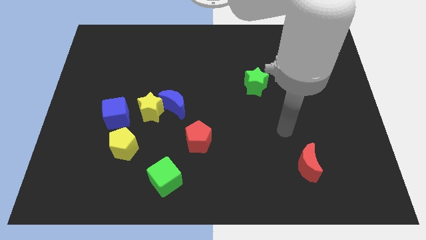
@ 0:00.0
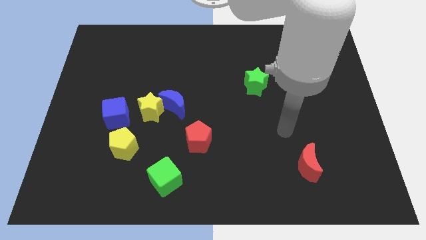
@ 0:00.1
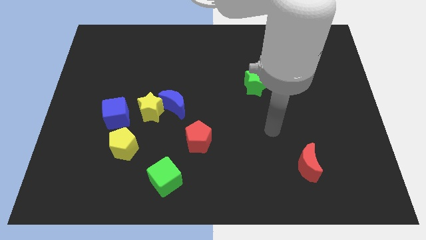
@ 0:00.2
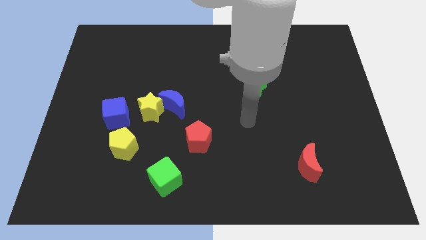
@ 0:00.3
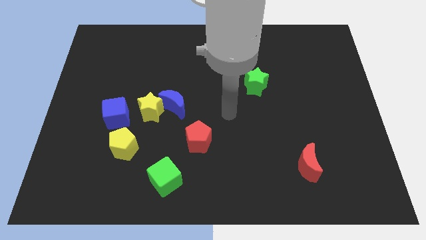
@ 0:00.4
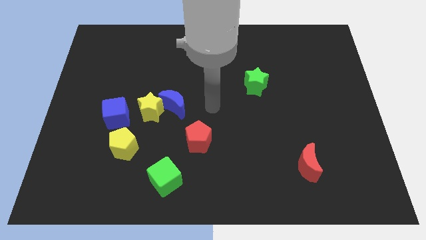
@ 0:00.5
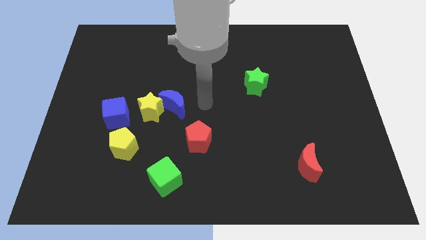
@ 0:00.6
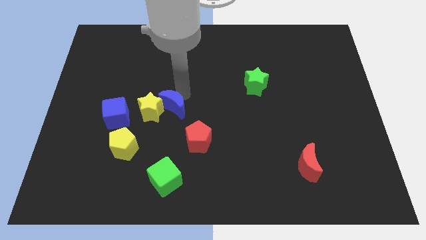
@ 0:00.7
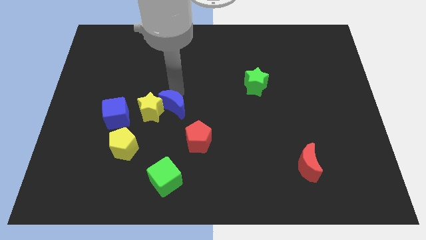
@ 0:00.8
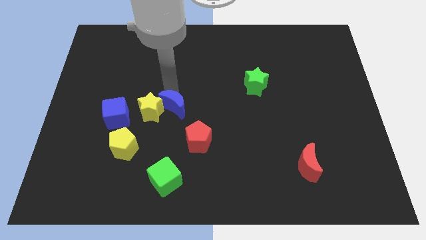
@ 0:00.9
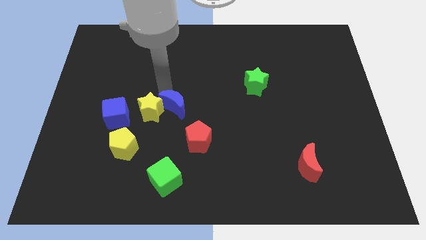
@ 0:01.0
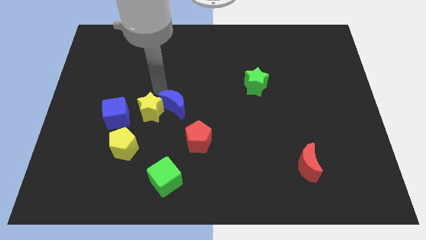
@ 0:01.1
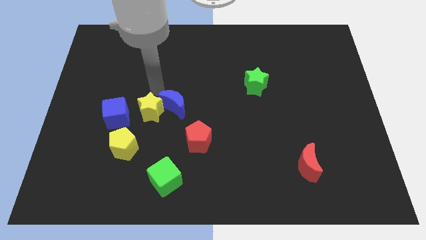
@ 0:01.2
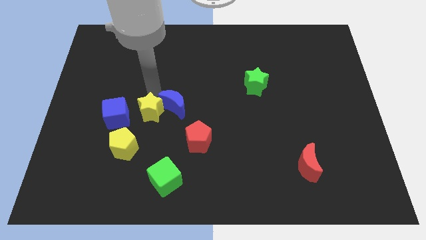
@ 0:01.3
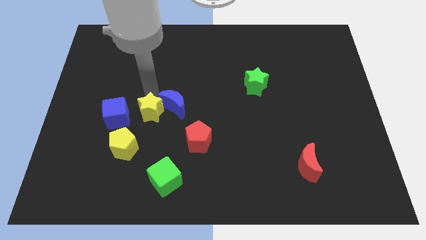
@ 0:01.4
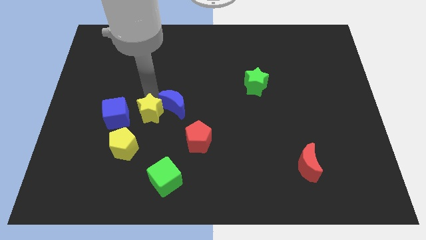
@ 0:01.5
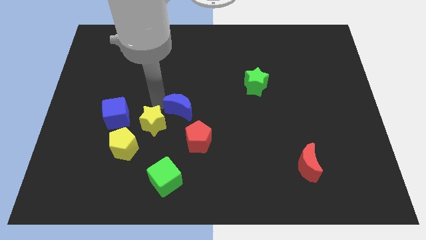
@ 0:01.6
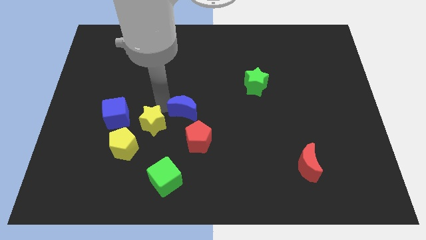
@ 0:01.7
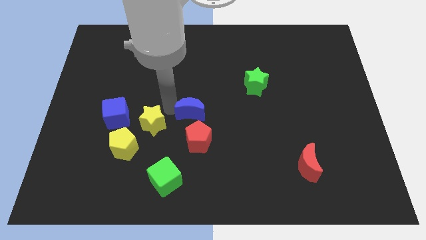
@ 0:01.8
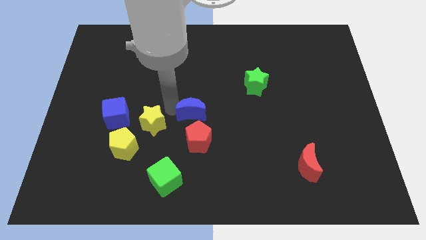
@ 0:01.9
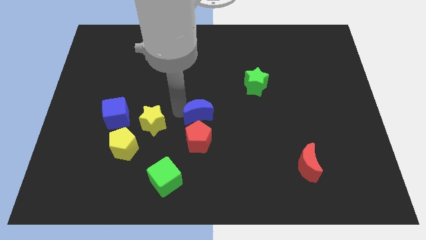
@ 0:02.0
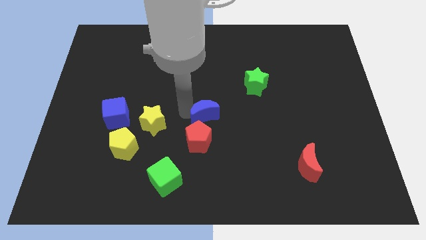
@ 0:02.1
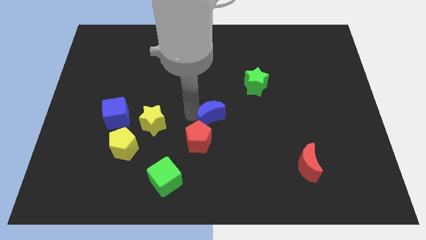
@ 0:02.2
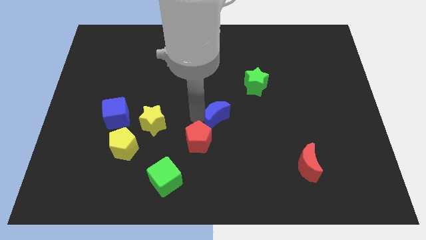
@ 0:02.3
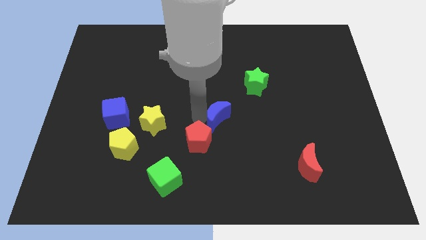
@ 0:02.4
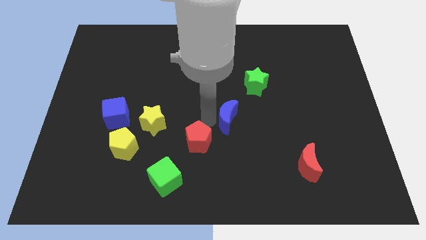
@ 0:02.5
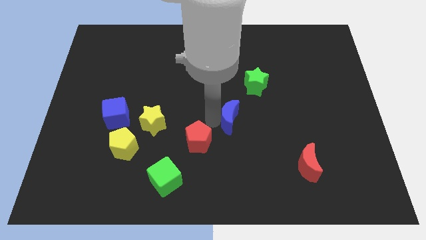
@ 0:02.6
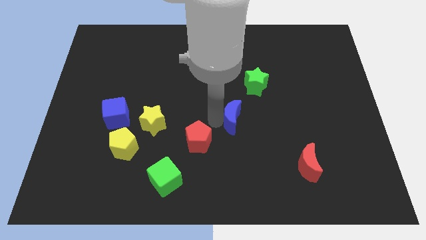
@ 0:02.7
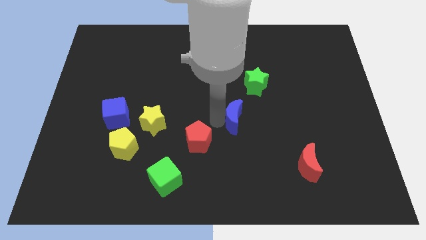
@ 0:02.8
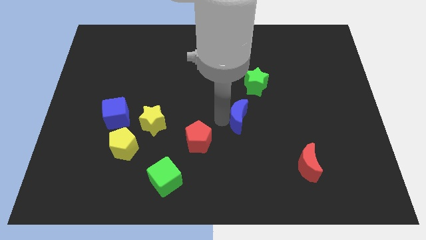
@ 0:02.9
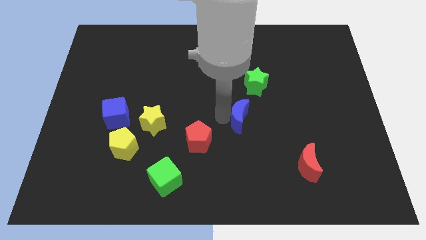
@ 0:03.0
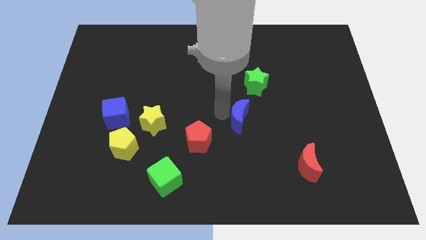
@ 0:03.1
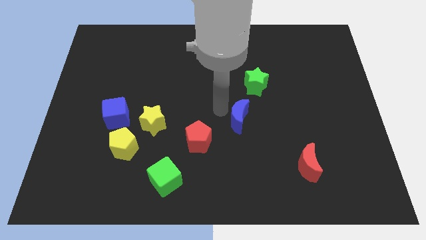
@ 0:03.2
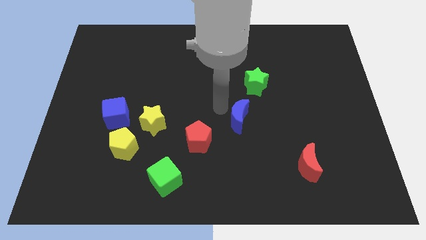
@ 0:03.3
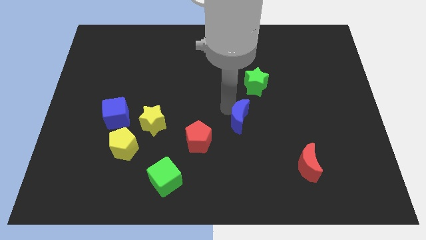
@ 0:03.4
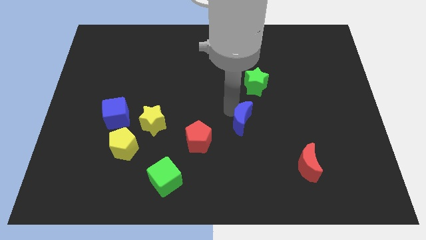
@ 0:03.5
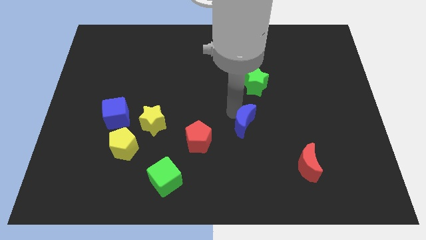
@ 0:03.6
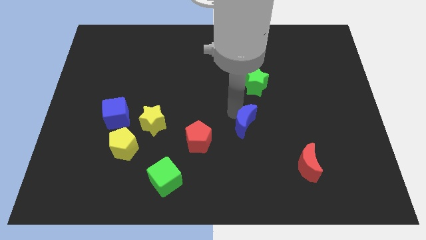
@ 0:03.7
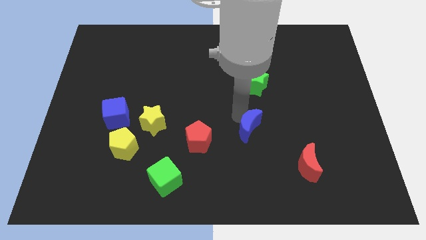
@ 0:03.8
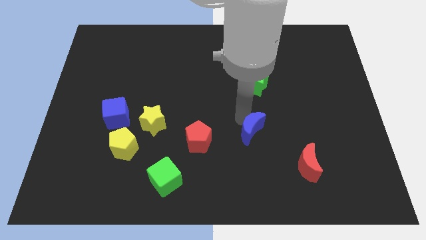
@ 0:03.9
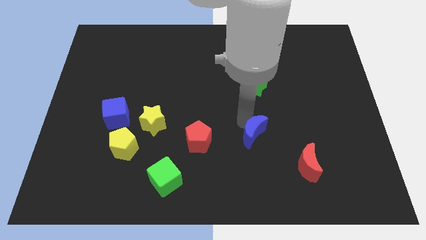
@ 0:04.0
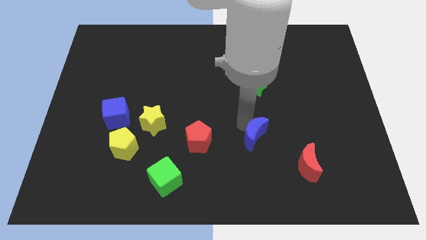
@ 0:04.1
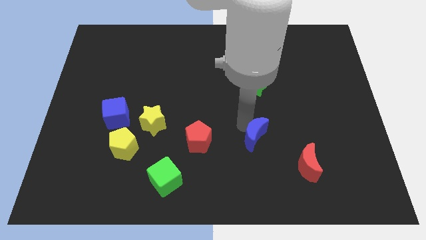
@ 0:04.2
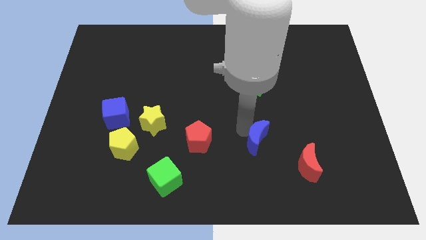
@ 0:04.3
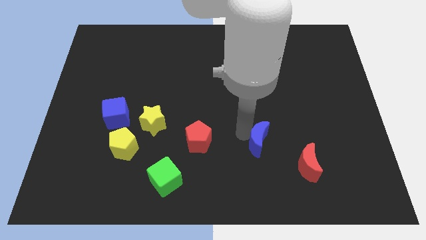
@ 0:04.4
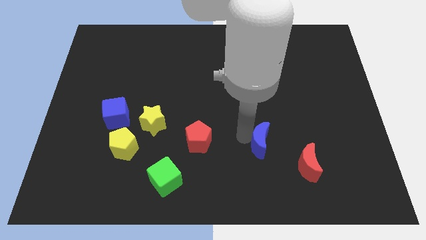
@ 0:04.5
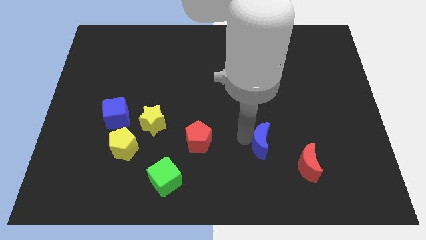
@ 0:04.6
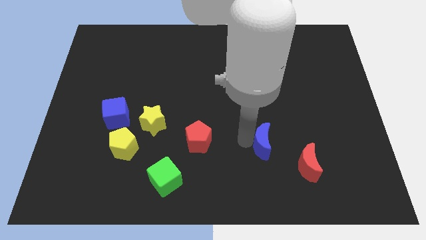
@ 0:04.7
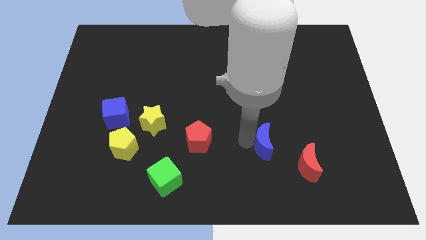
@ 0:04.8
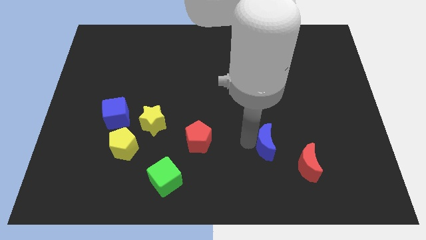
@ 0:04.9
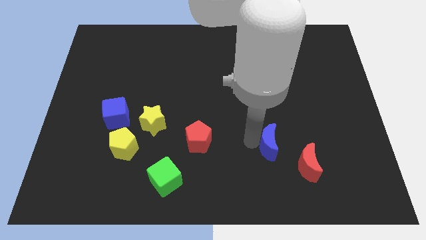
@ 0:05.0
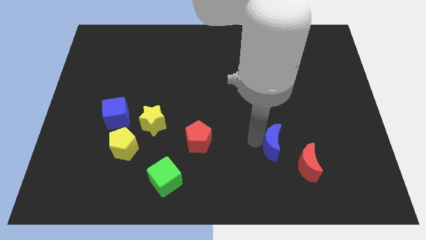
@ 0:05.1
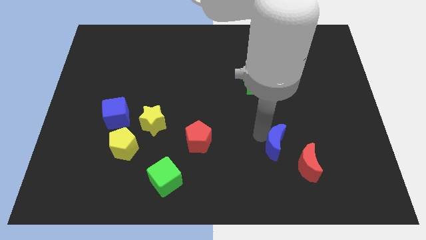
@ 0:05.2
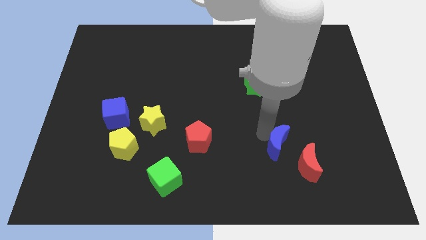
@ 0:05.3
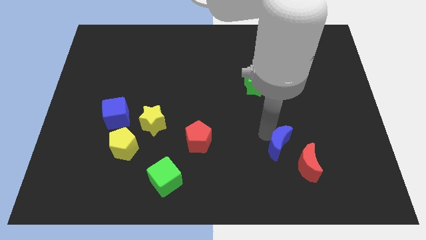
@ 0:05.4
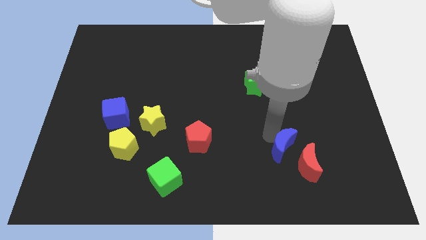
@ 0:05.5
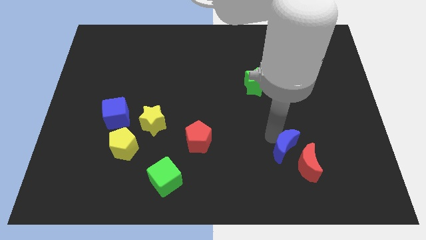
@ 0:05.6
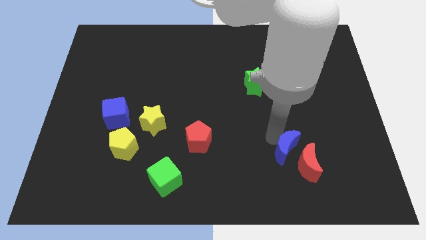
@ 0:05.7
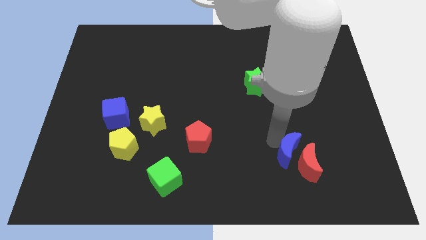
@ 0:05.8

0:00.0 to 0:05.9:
put the blue moon towards the red moon

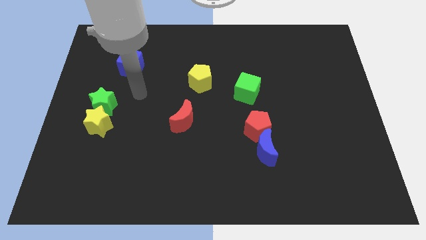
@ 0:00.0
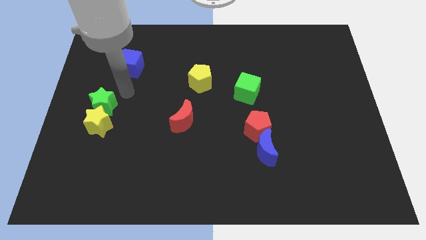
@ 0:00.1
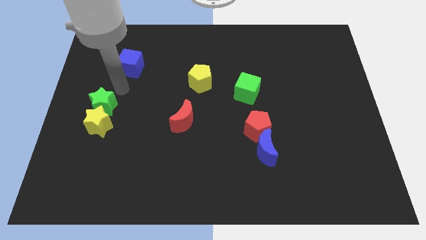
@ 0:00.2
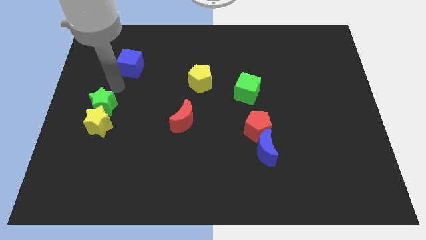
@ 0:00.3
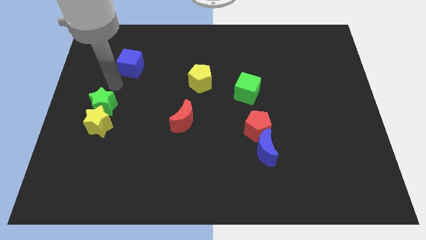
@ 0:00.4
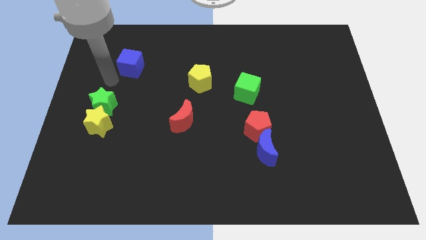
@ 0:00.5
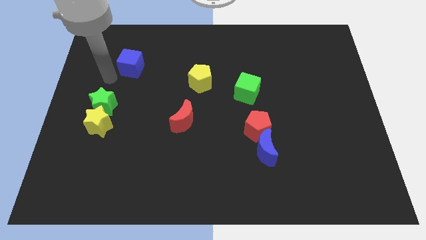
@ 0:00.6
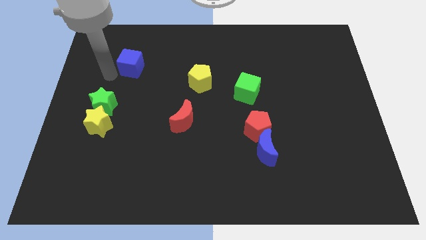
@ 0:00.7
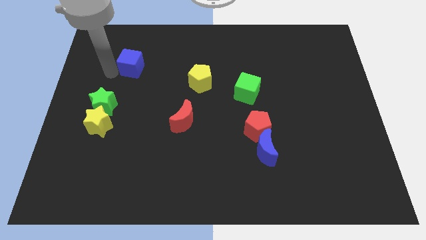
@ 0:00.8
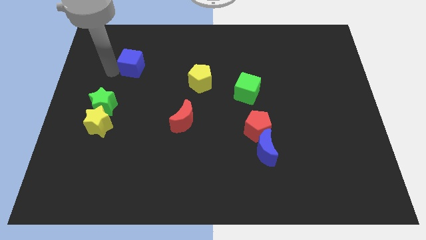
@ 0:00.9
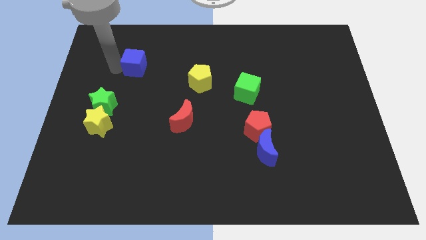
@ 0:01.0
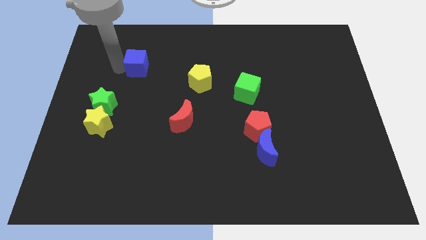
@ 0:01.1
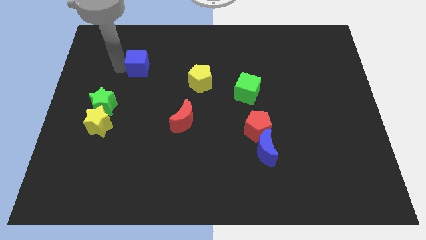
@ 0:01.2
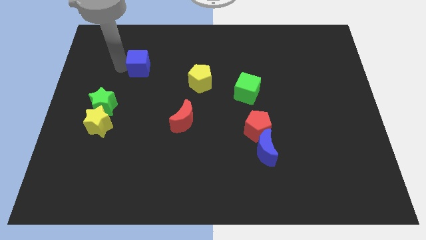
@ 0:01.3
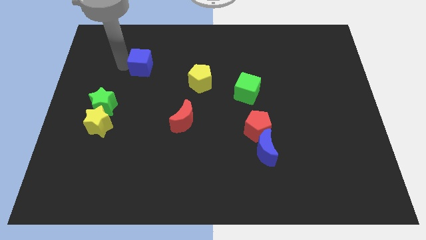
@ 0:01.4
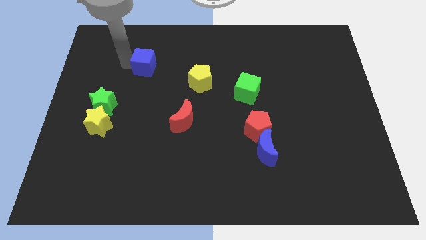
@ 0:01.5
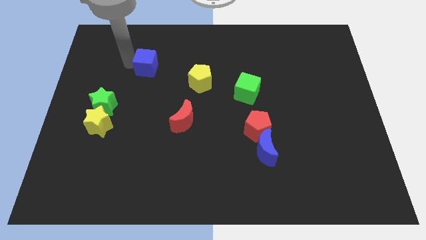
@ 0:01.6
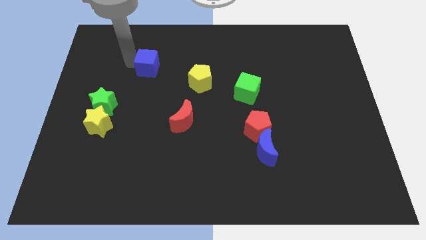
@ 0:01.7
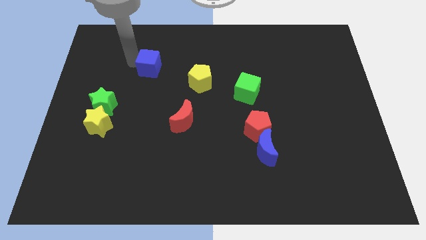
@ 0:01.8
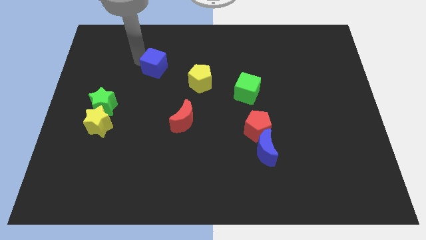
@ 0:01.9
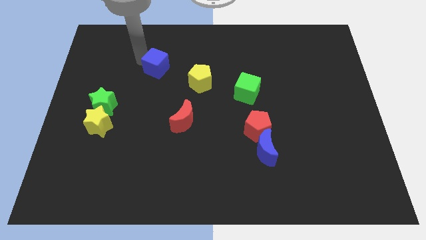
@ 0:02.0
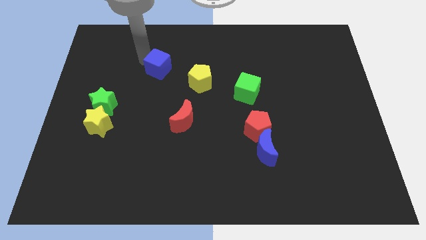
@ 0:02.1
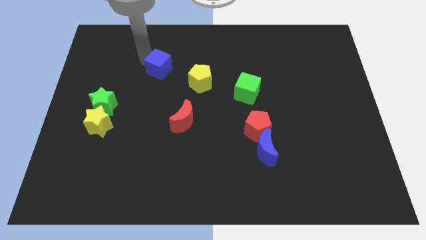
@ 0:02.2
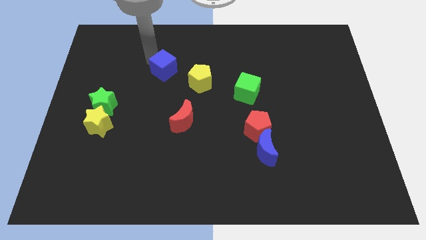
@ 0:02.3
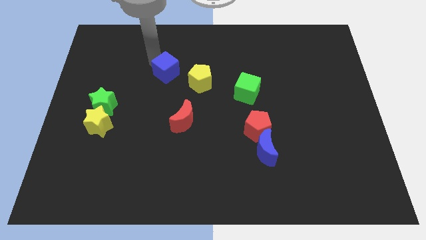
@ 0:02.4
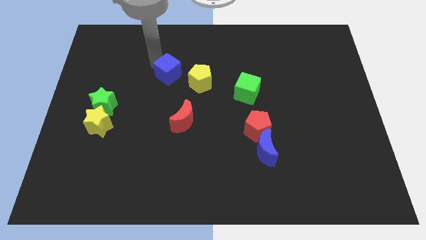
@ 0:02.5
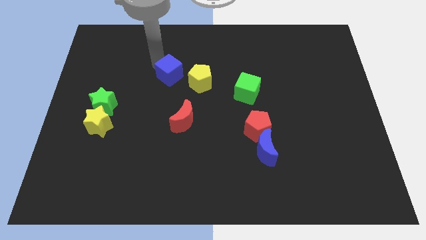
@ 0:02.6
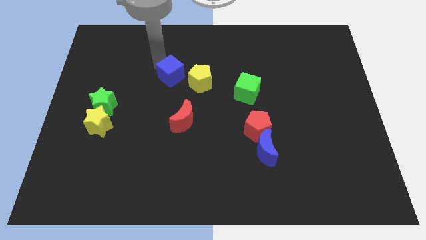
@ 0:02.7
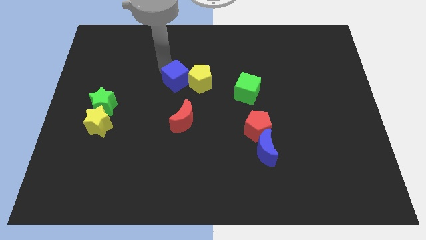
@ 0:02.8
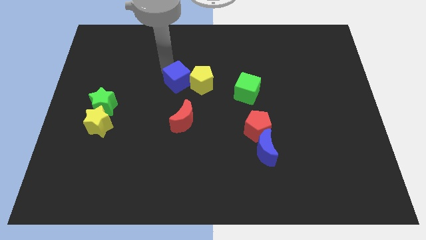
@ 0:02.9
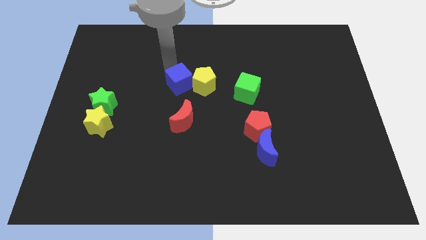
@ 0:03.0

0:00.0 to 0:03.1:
push the blue cube to the yellow pentagon
